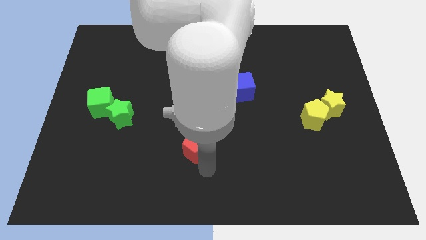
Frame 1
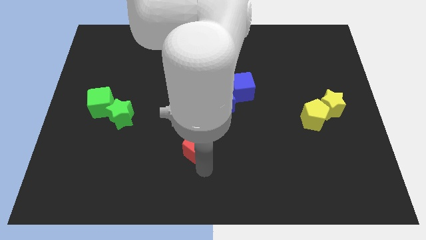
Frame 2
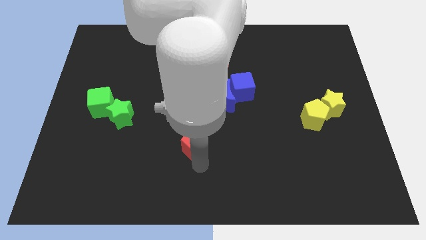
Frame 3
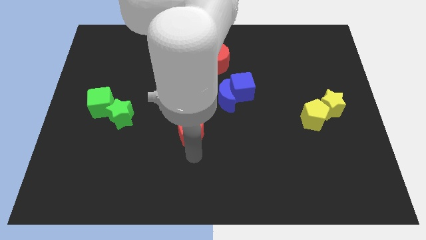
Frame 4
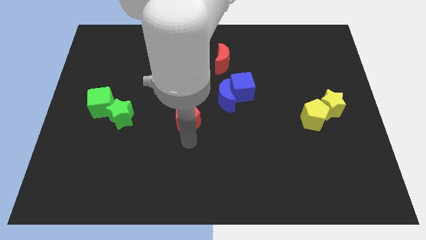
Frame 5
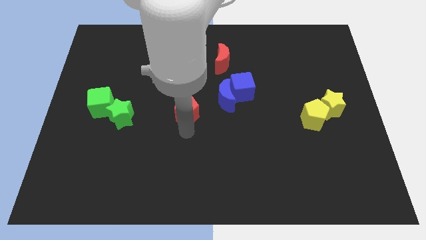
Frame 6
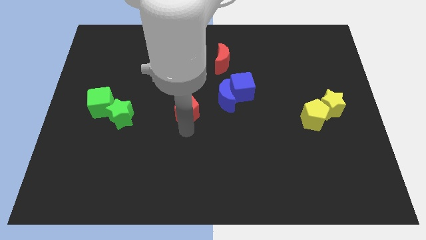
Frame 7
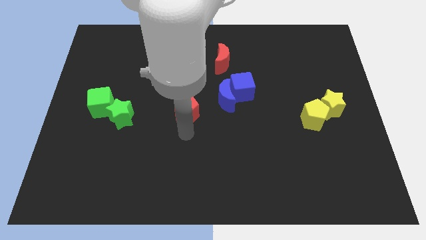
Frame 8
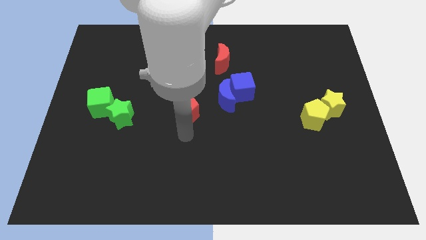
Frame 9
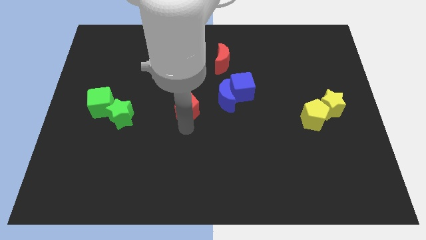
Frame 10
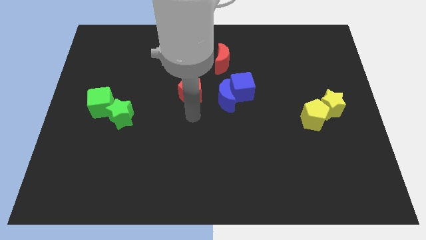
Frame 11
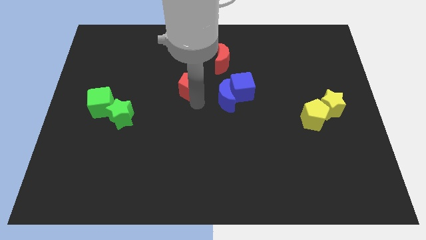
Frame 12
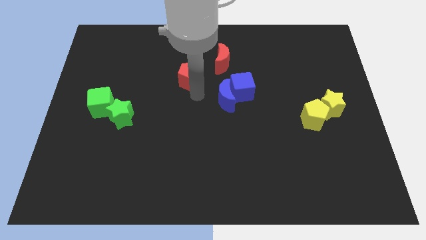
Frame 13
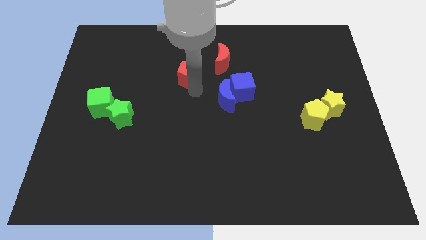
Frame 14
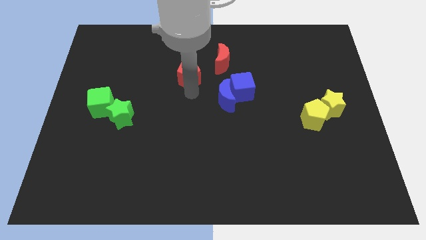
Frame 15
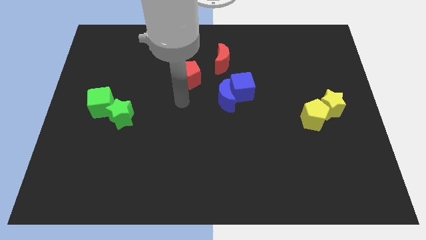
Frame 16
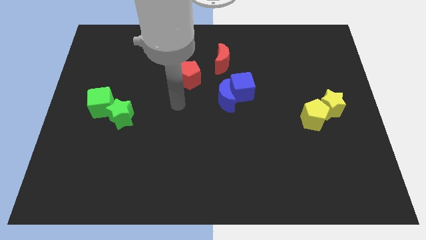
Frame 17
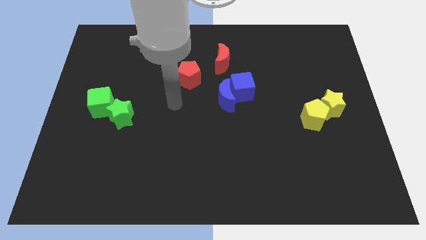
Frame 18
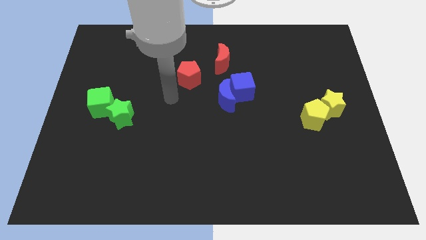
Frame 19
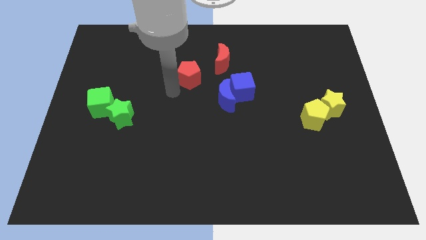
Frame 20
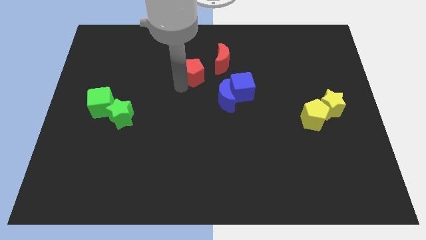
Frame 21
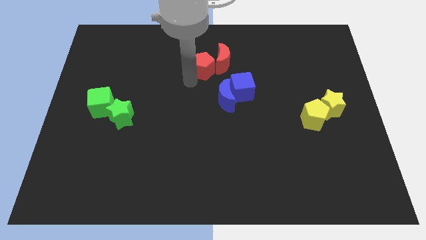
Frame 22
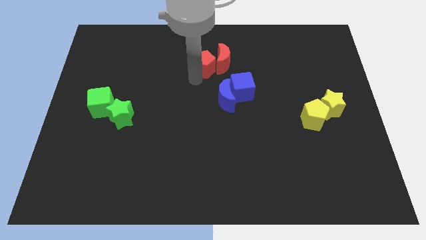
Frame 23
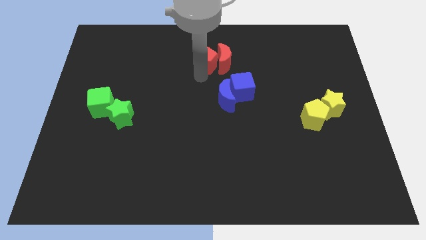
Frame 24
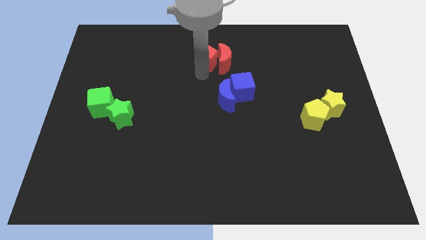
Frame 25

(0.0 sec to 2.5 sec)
place the red pentagon left to the red crescent

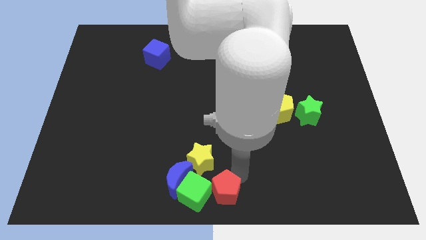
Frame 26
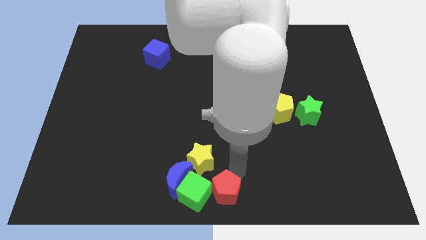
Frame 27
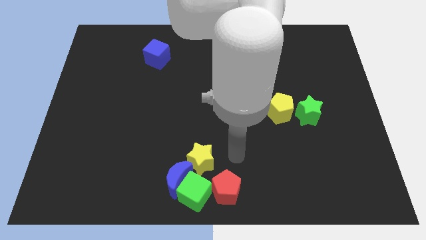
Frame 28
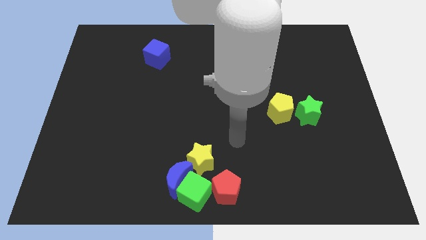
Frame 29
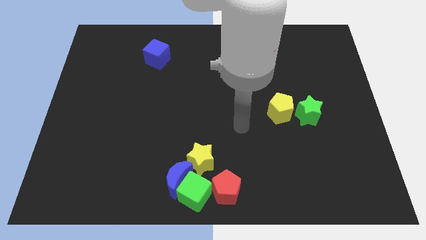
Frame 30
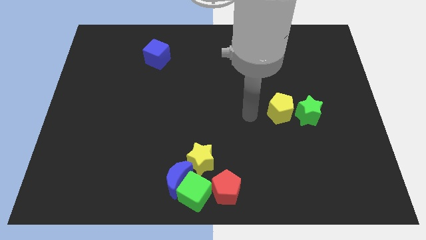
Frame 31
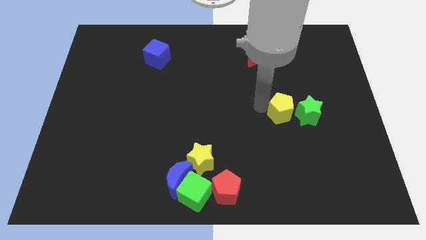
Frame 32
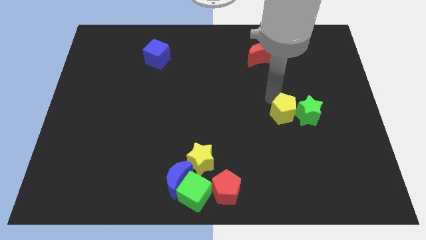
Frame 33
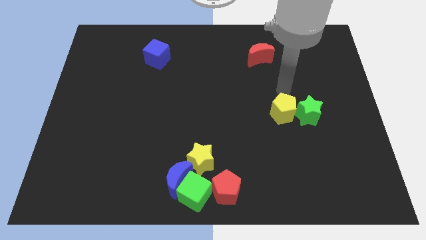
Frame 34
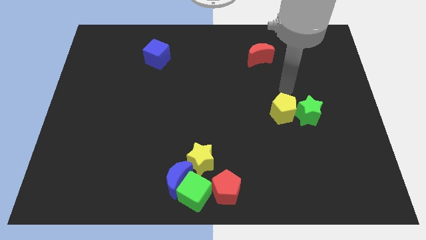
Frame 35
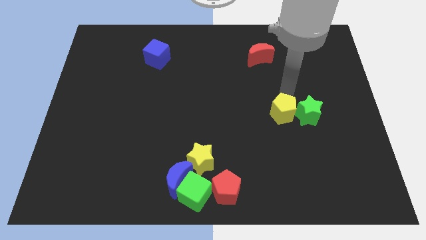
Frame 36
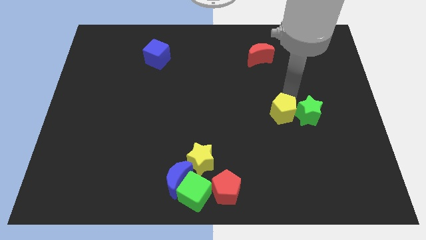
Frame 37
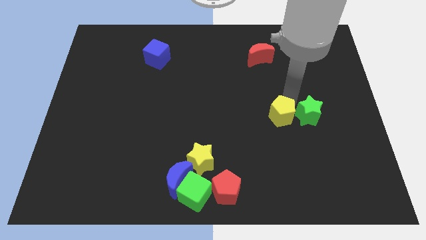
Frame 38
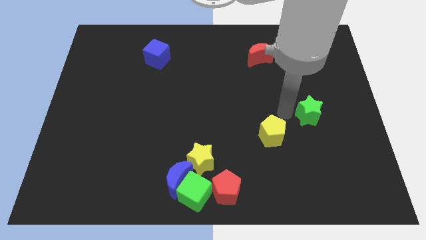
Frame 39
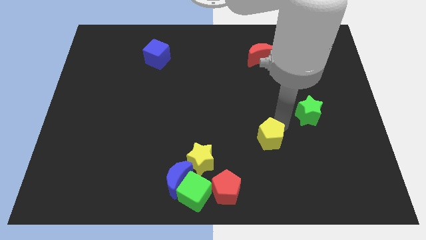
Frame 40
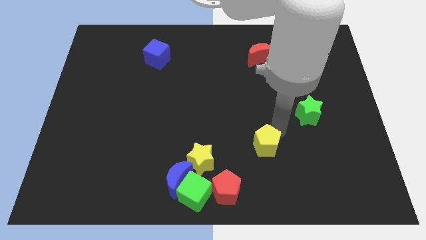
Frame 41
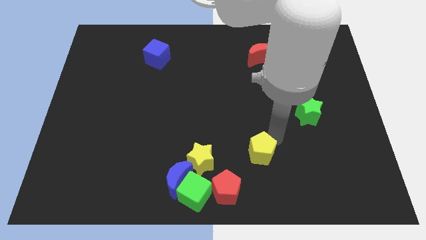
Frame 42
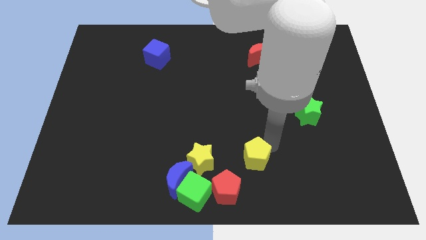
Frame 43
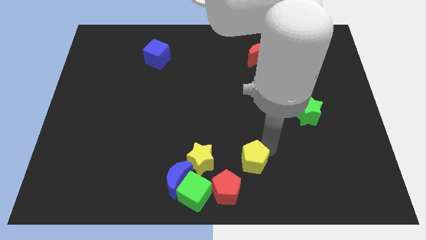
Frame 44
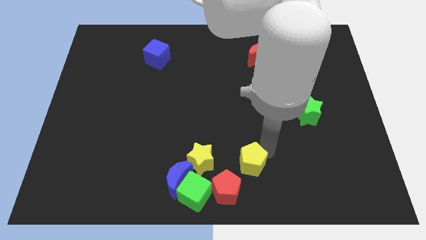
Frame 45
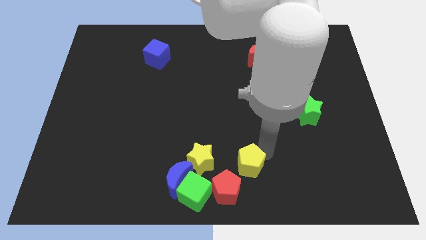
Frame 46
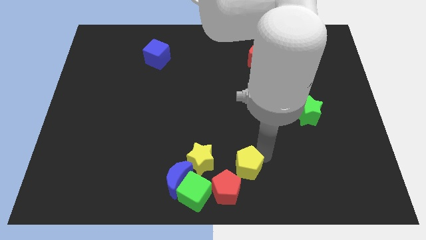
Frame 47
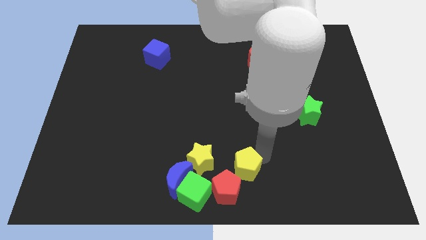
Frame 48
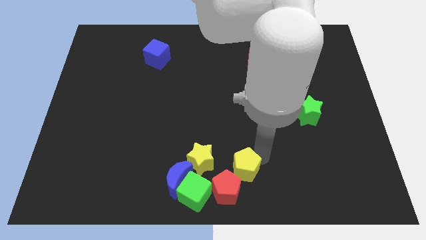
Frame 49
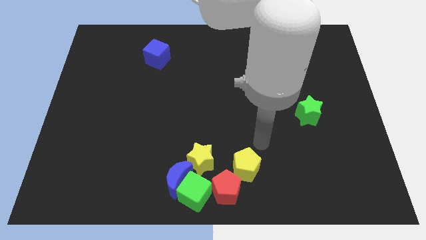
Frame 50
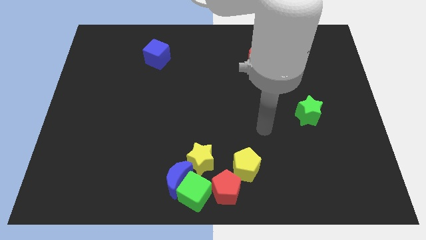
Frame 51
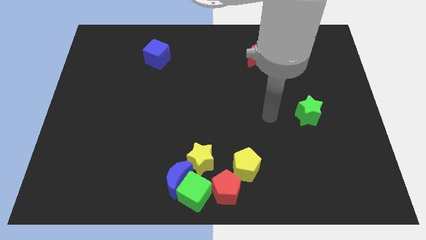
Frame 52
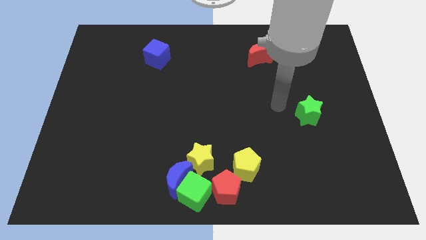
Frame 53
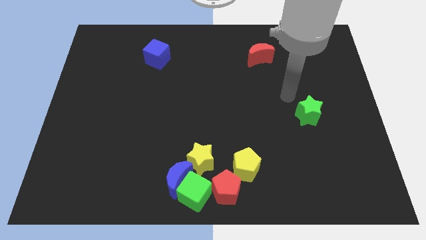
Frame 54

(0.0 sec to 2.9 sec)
place the yellow pentagon to the right of the yellow star

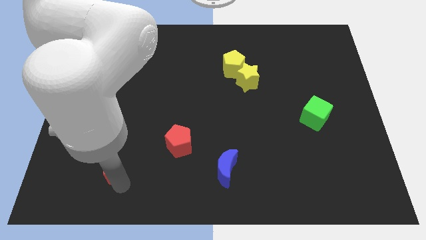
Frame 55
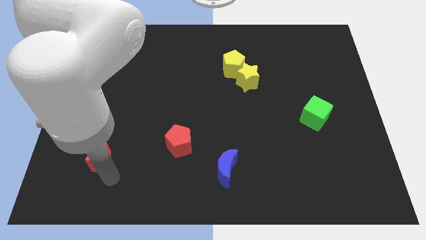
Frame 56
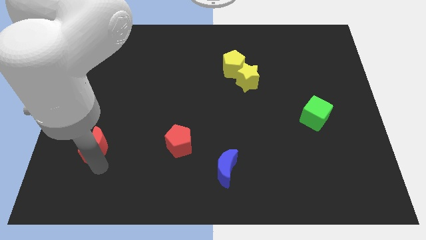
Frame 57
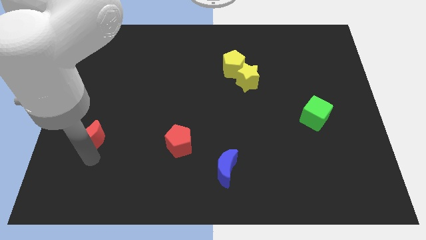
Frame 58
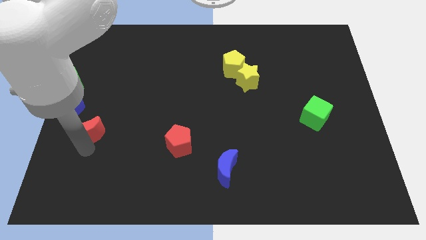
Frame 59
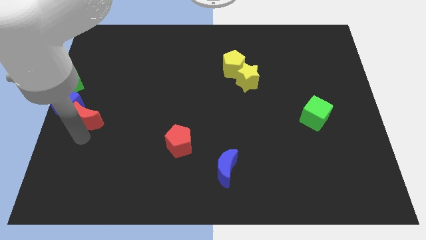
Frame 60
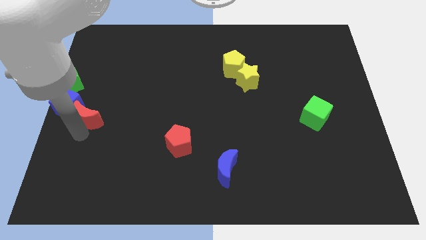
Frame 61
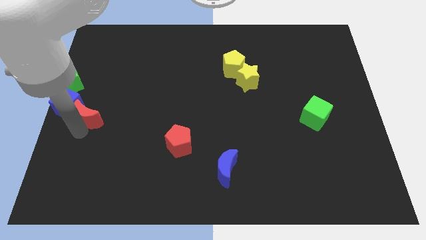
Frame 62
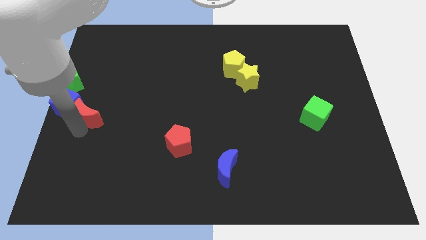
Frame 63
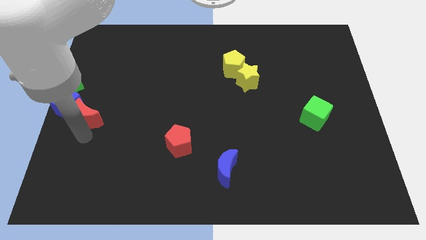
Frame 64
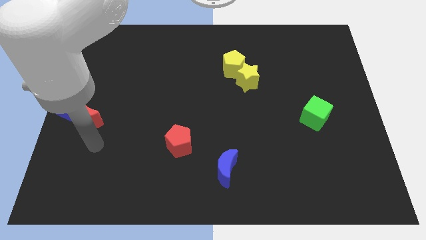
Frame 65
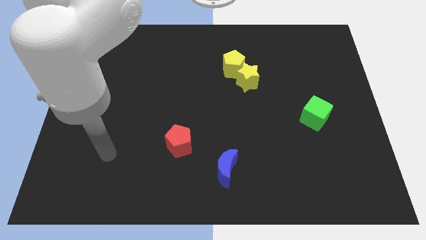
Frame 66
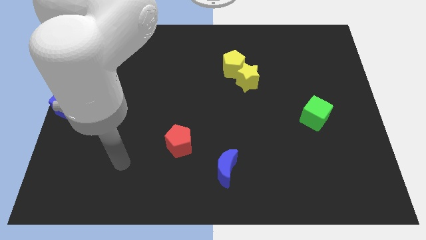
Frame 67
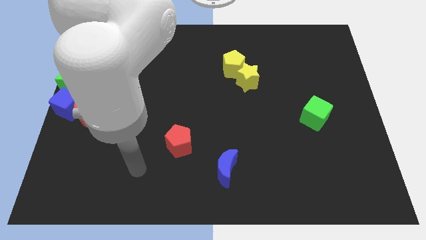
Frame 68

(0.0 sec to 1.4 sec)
place red moon to the right of blue cube

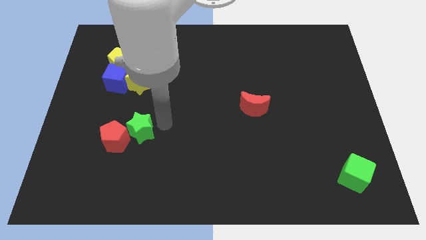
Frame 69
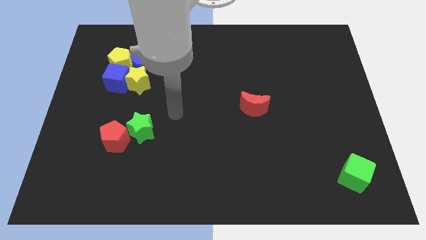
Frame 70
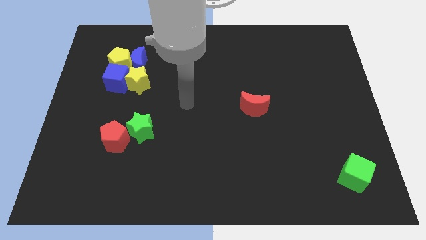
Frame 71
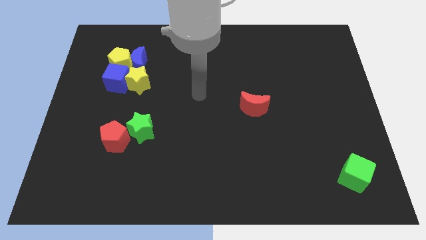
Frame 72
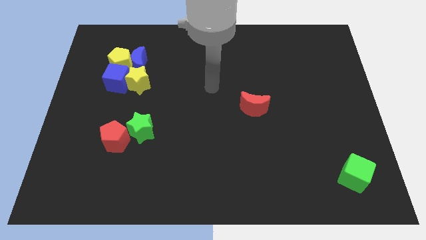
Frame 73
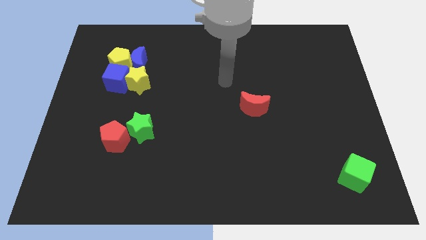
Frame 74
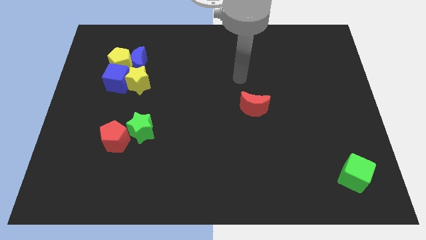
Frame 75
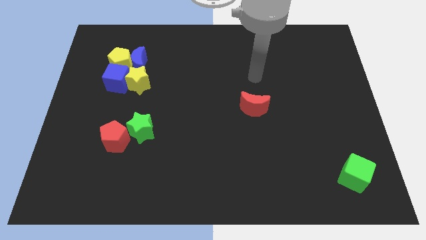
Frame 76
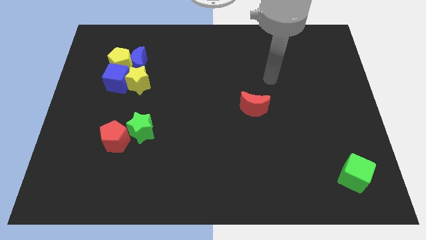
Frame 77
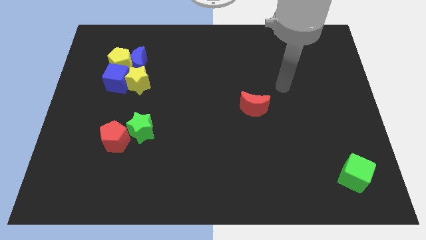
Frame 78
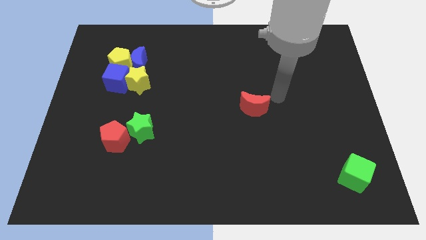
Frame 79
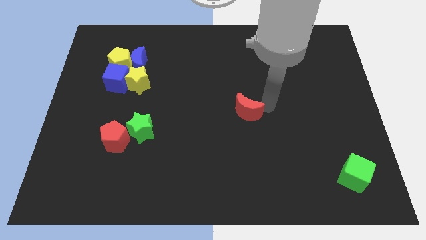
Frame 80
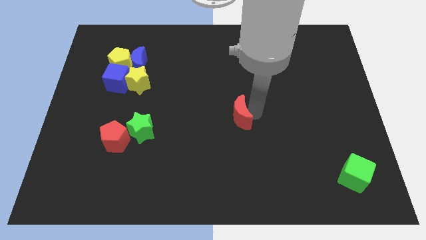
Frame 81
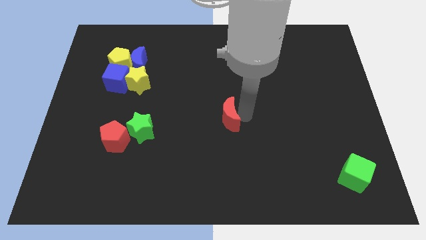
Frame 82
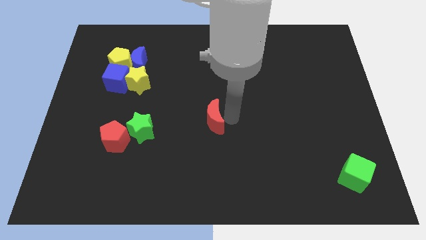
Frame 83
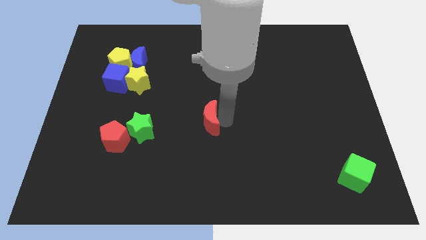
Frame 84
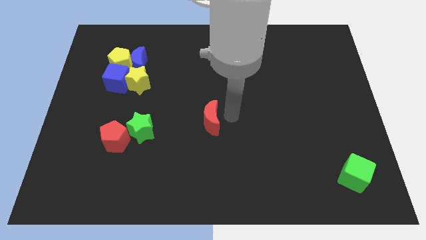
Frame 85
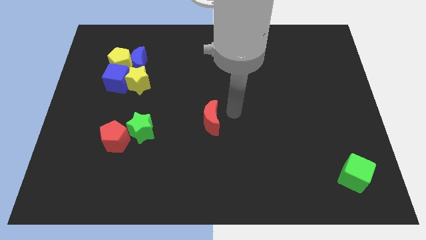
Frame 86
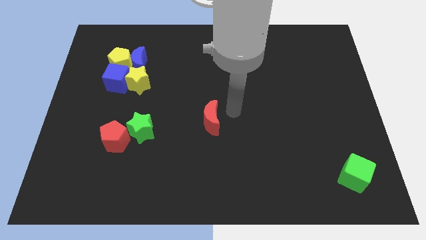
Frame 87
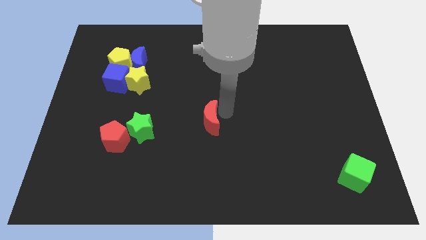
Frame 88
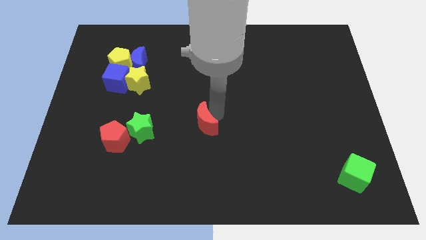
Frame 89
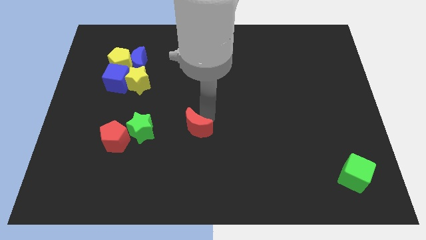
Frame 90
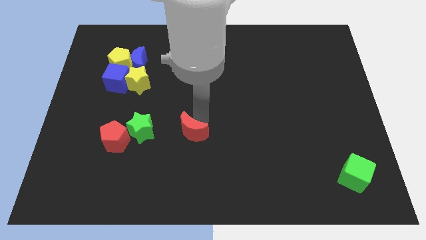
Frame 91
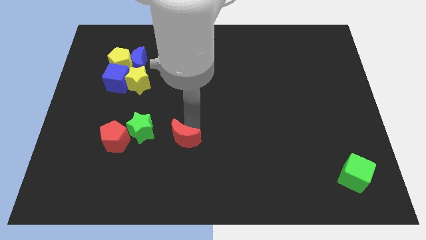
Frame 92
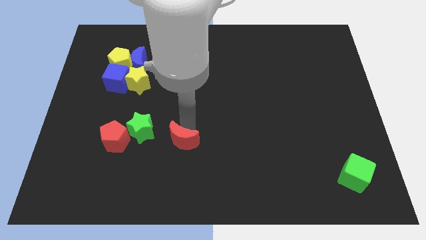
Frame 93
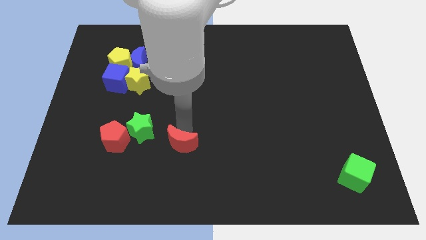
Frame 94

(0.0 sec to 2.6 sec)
move red crescent diagonally to the top of the green star
